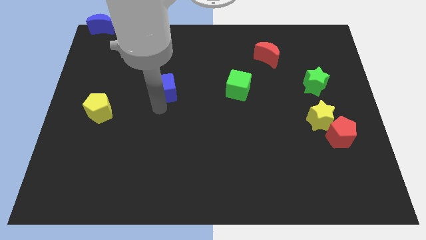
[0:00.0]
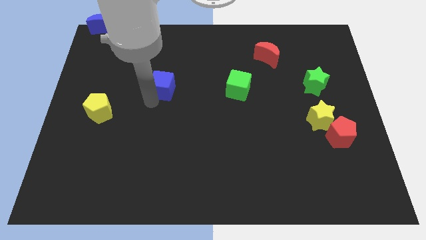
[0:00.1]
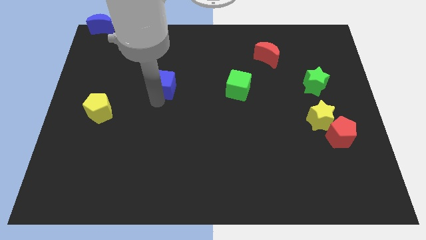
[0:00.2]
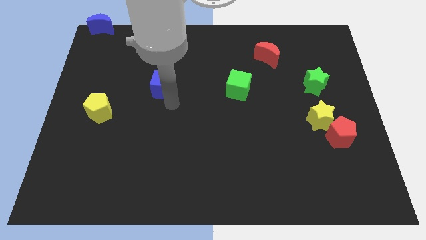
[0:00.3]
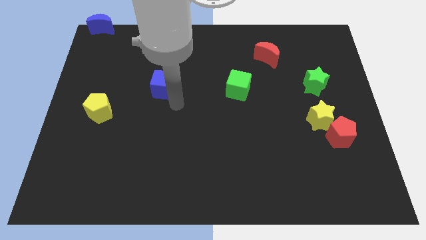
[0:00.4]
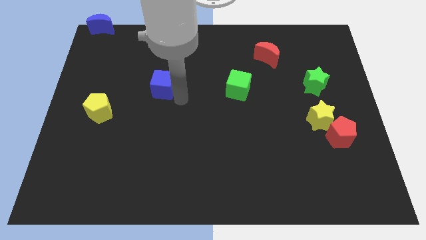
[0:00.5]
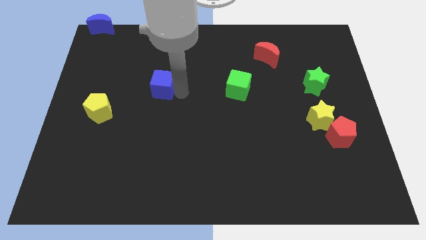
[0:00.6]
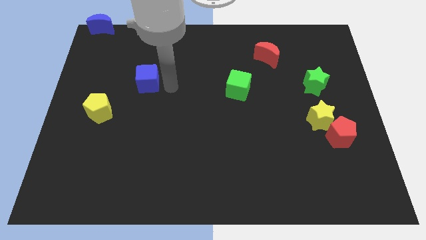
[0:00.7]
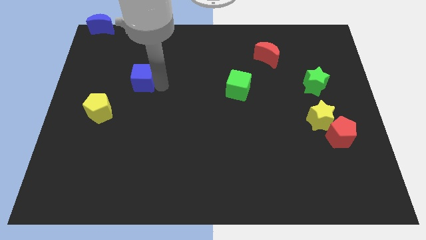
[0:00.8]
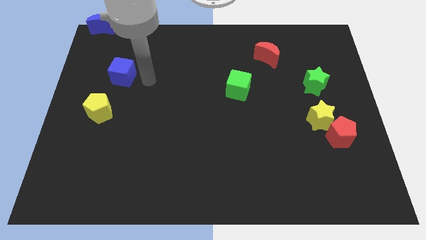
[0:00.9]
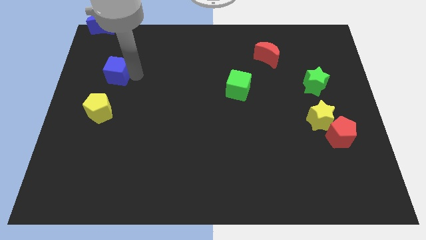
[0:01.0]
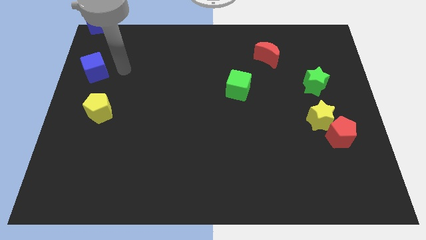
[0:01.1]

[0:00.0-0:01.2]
move the blue cube parallel to the top of yellow pentagon

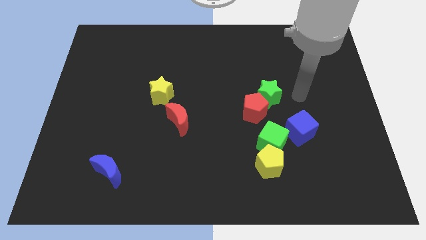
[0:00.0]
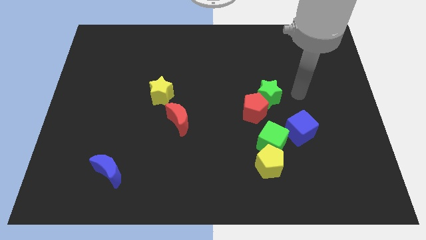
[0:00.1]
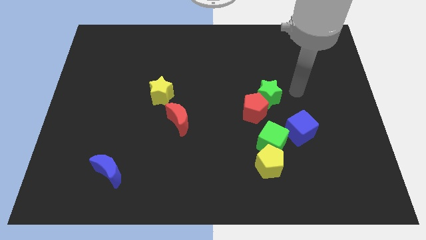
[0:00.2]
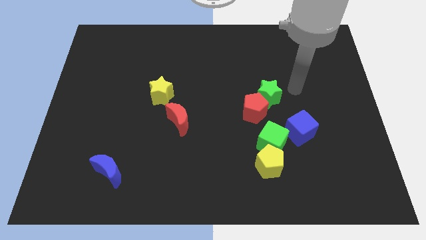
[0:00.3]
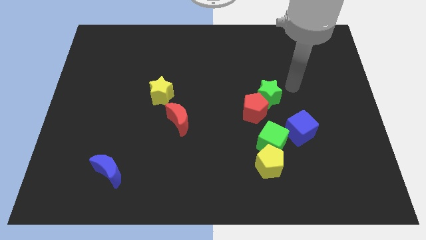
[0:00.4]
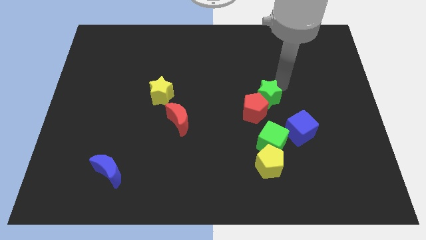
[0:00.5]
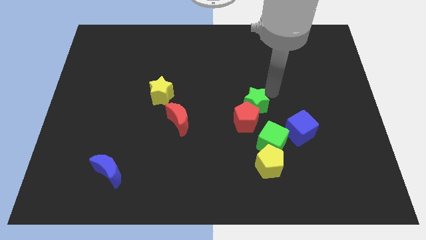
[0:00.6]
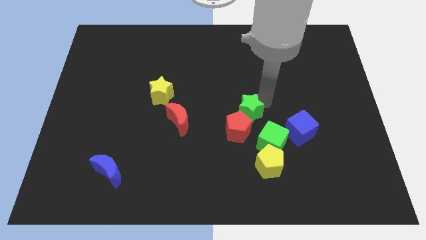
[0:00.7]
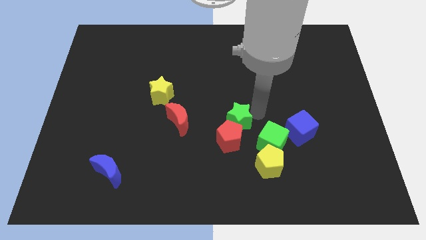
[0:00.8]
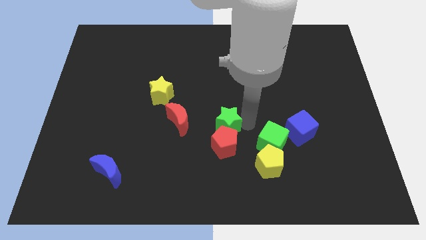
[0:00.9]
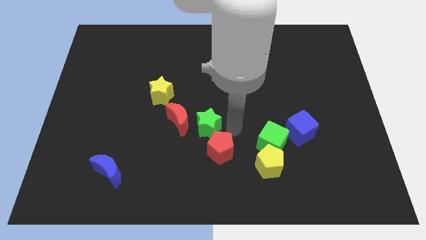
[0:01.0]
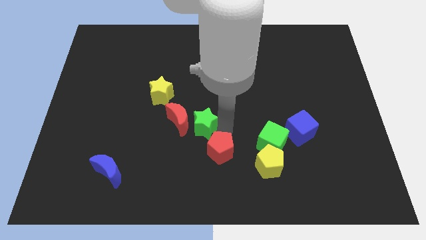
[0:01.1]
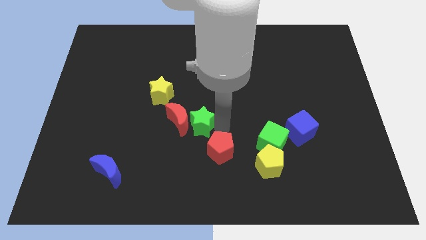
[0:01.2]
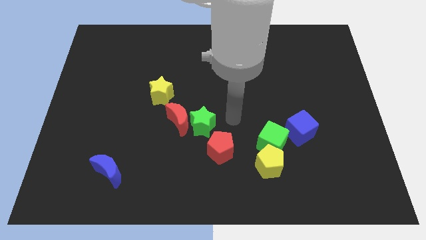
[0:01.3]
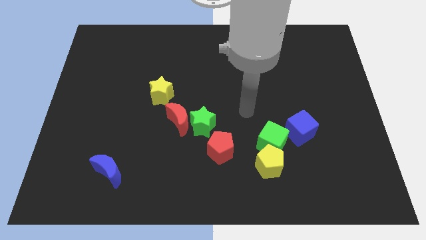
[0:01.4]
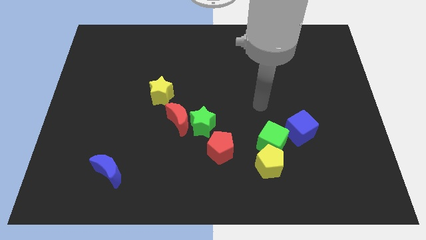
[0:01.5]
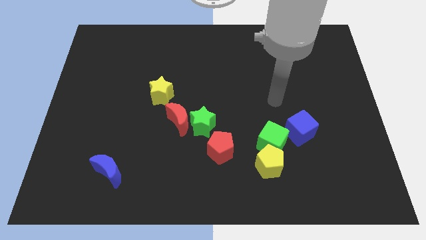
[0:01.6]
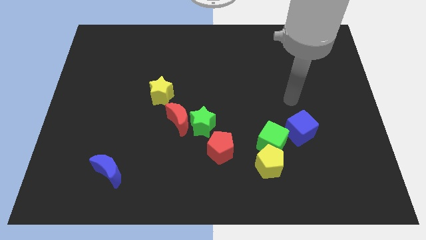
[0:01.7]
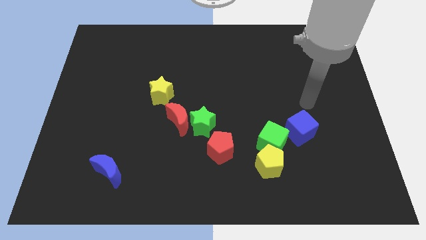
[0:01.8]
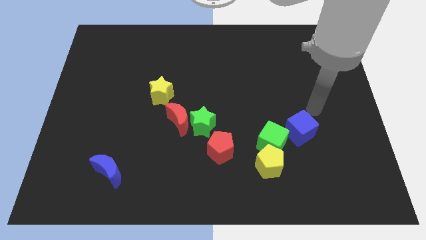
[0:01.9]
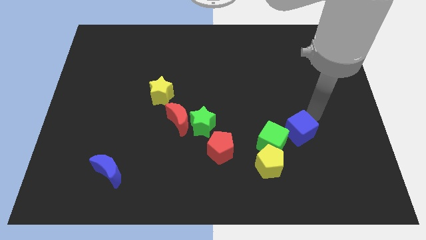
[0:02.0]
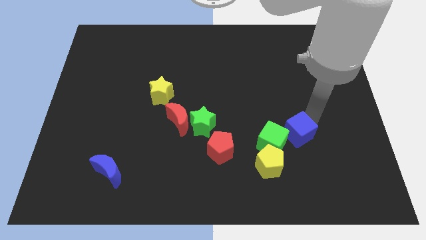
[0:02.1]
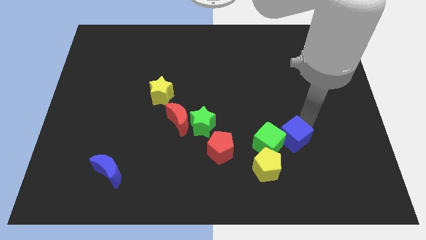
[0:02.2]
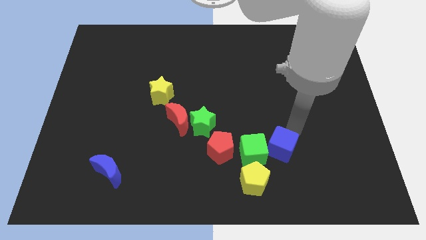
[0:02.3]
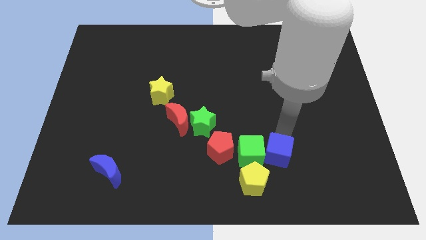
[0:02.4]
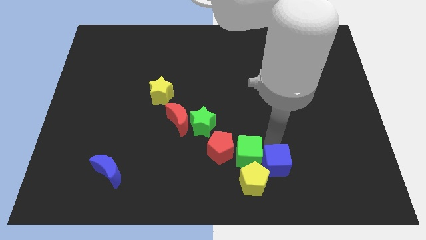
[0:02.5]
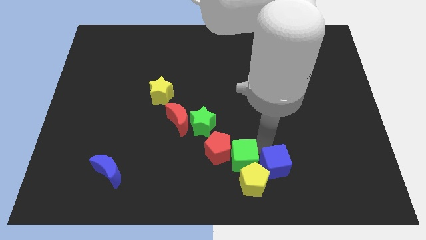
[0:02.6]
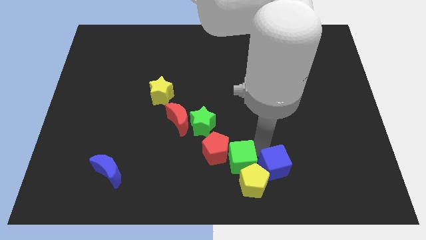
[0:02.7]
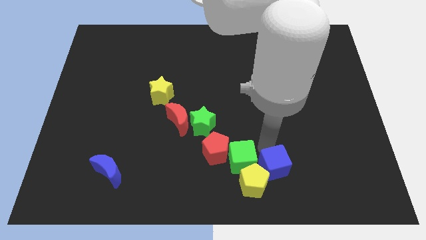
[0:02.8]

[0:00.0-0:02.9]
move all the blocks slightly down

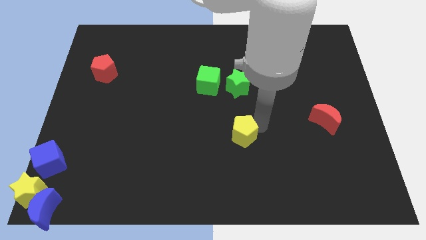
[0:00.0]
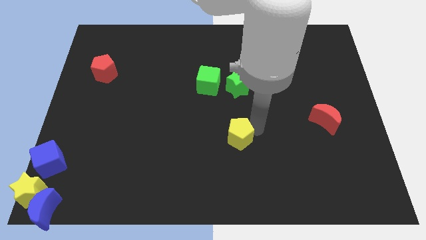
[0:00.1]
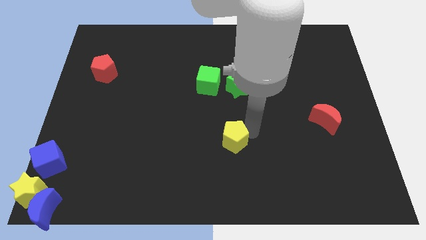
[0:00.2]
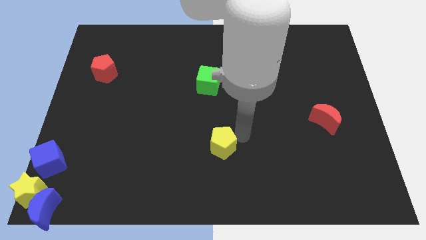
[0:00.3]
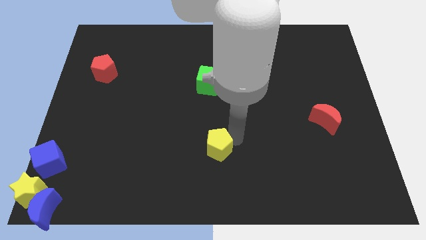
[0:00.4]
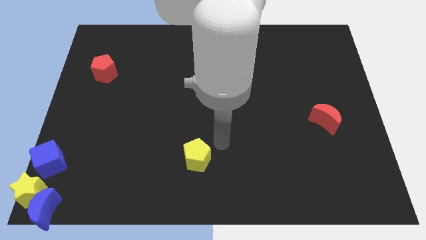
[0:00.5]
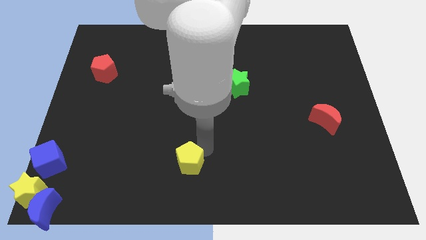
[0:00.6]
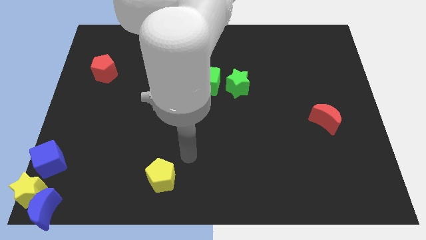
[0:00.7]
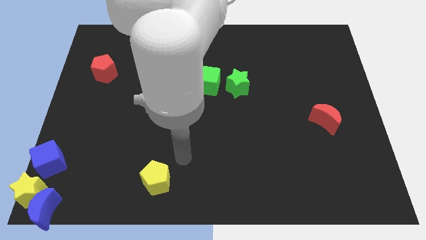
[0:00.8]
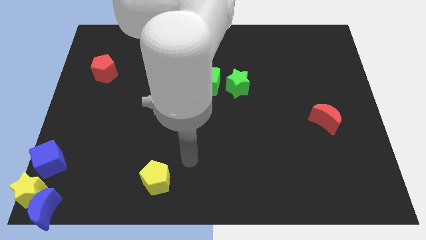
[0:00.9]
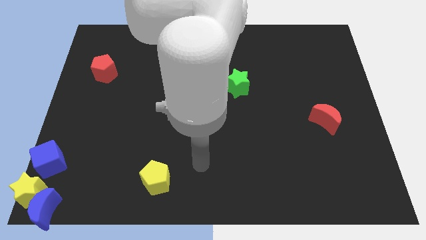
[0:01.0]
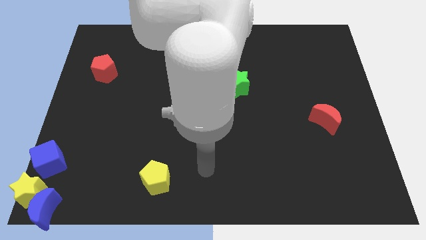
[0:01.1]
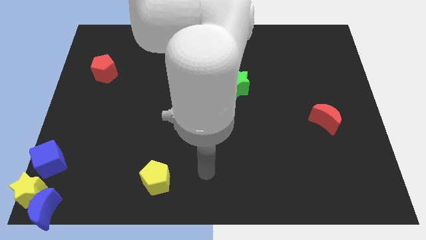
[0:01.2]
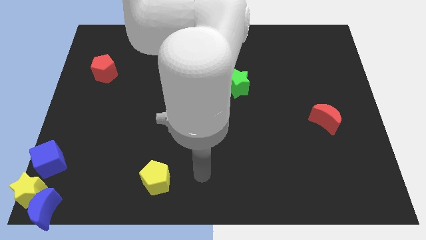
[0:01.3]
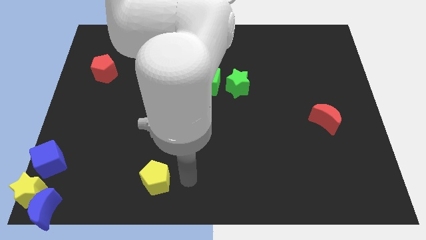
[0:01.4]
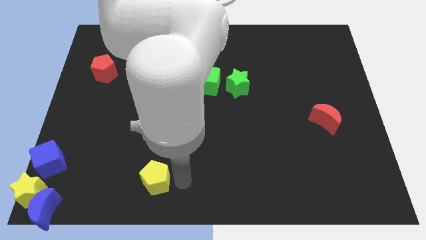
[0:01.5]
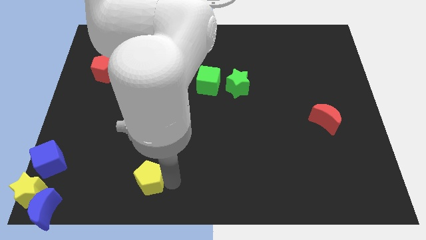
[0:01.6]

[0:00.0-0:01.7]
move the yellow pentagon towards the blue moon

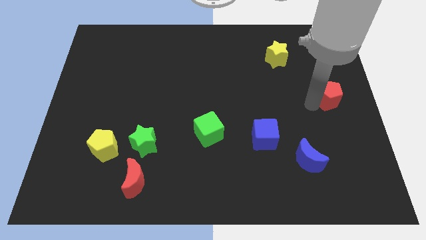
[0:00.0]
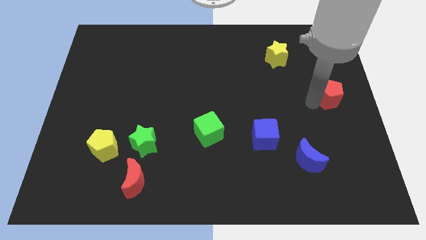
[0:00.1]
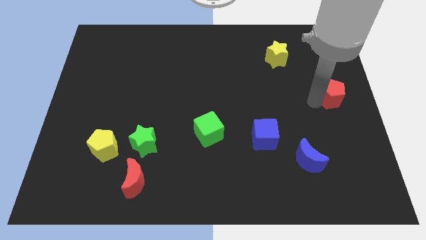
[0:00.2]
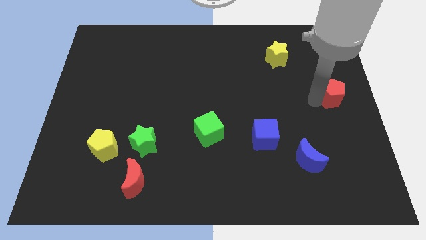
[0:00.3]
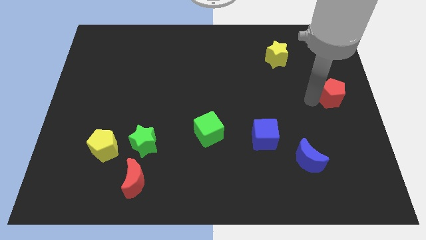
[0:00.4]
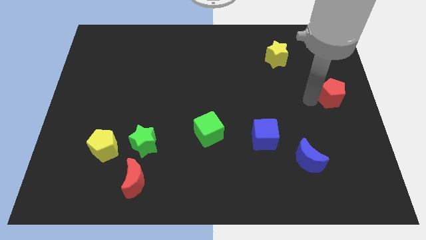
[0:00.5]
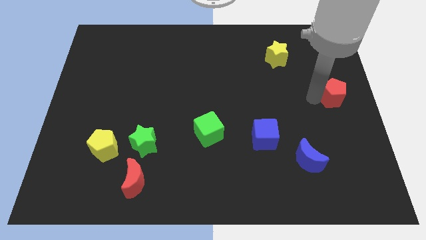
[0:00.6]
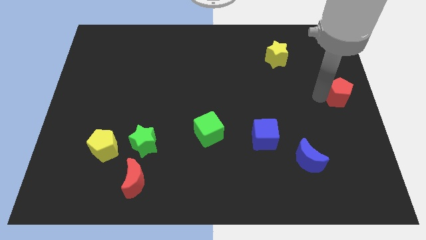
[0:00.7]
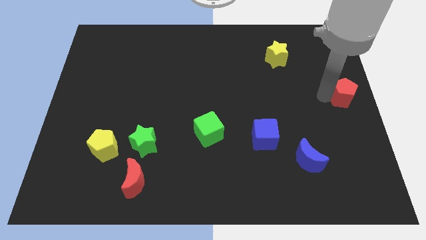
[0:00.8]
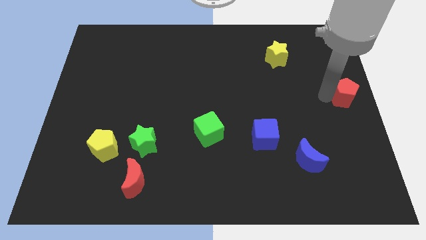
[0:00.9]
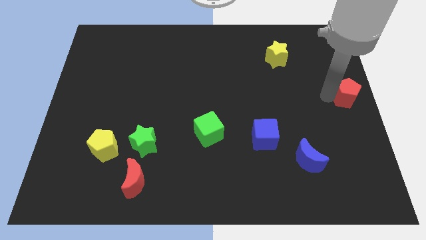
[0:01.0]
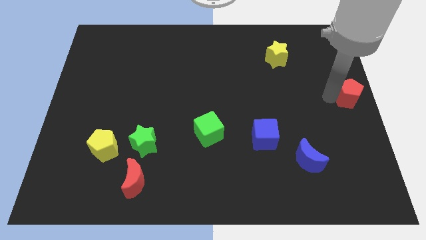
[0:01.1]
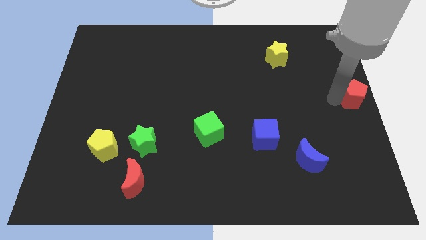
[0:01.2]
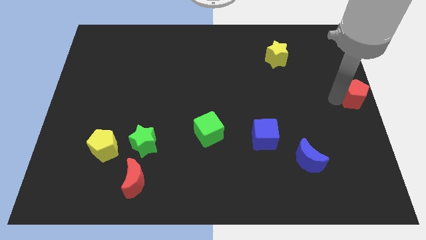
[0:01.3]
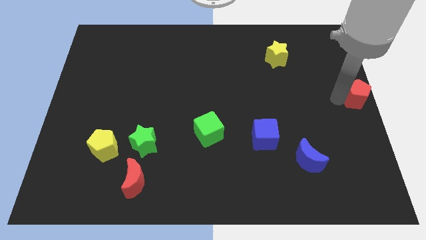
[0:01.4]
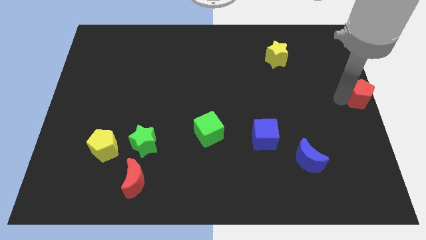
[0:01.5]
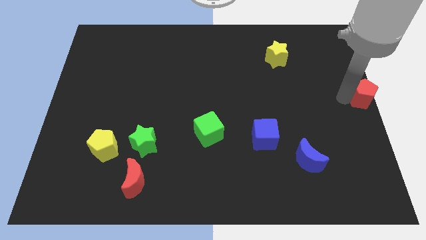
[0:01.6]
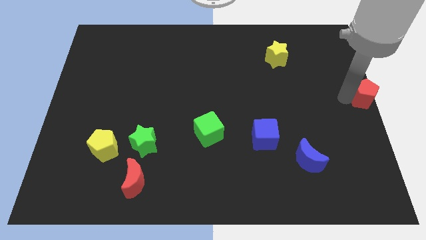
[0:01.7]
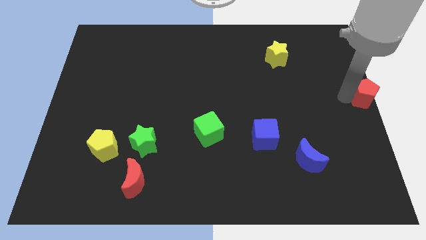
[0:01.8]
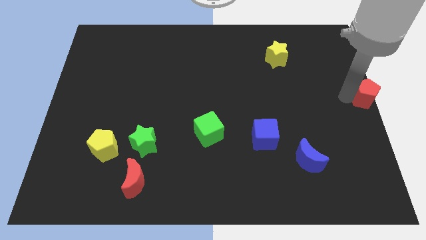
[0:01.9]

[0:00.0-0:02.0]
move the red pentagon to the center right of the board

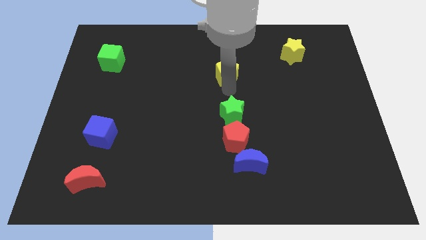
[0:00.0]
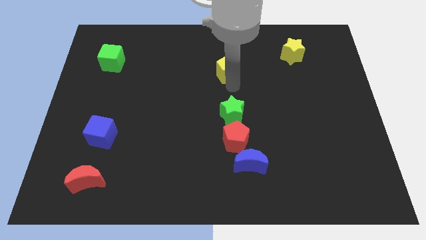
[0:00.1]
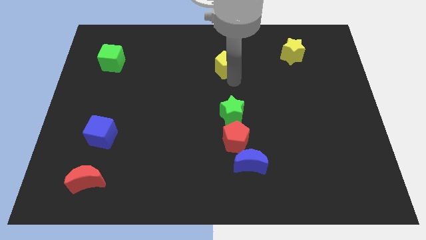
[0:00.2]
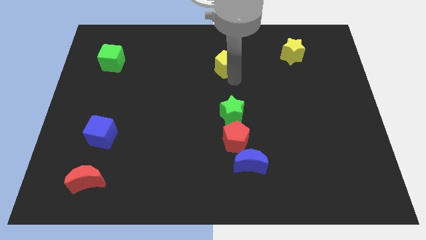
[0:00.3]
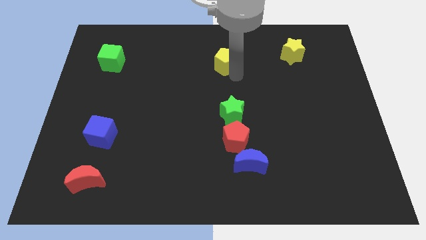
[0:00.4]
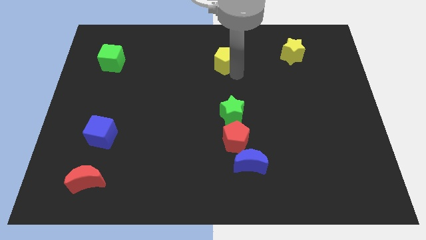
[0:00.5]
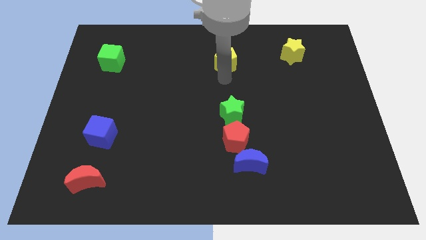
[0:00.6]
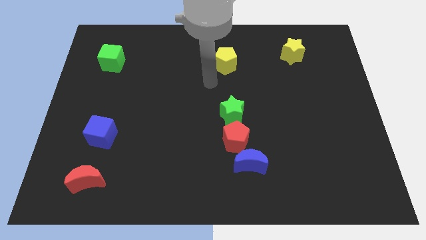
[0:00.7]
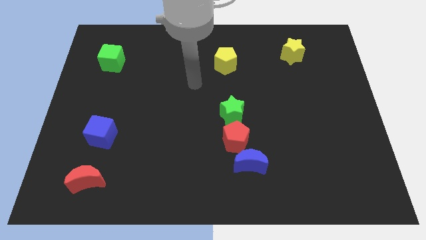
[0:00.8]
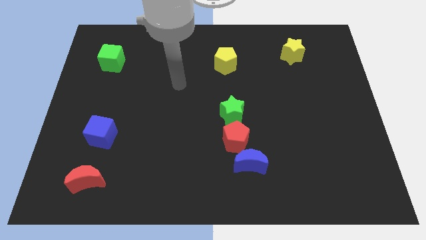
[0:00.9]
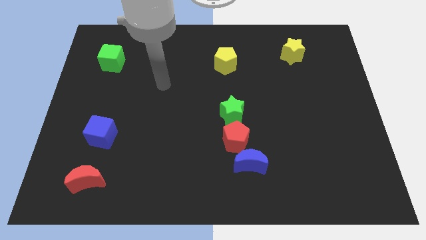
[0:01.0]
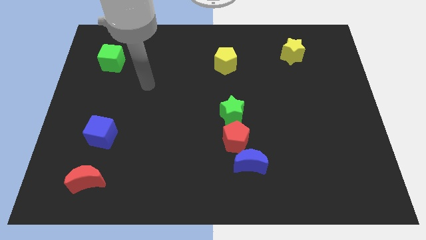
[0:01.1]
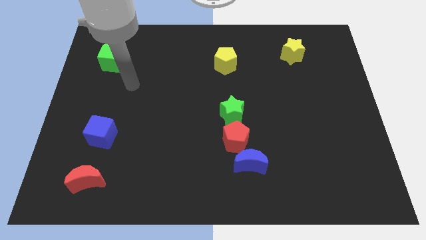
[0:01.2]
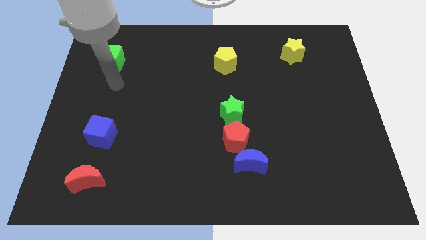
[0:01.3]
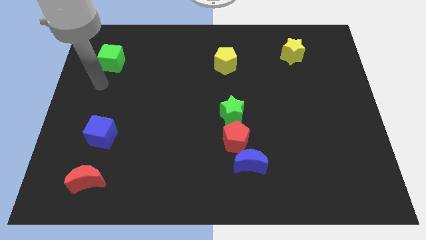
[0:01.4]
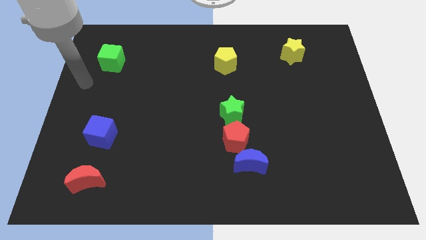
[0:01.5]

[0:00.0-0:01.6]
move the yellow pentagon slightly to the top
